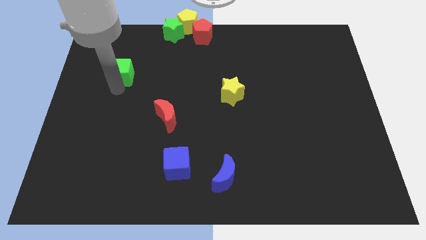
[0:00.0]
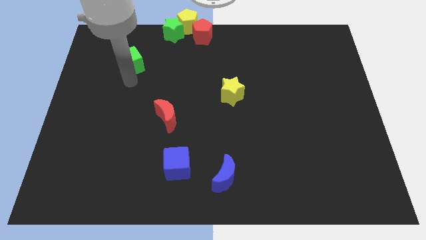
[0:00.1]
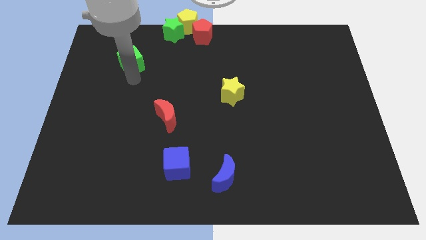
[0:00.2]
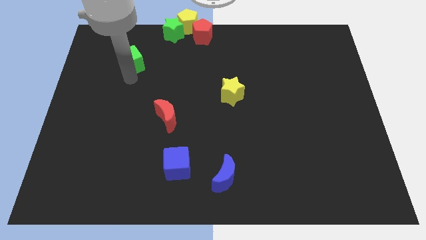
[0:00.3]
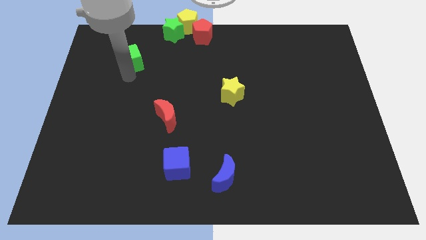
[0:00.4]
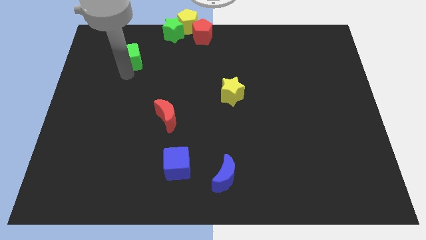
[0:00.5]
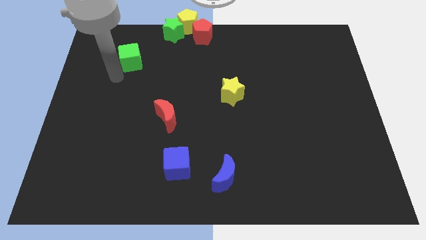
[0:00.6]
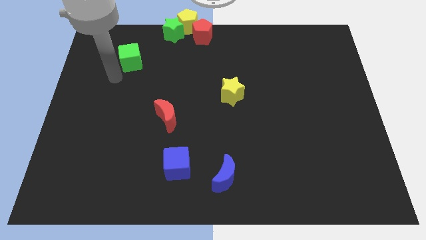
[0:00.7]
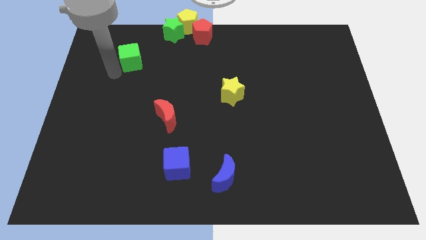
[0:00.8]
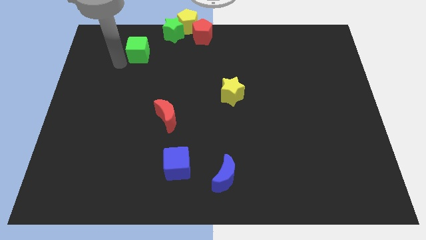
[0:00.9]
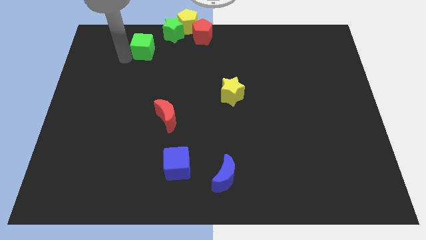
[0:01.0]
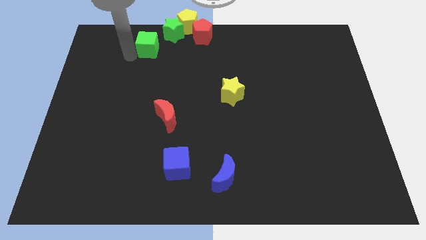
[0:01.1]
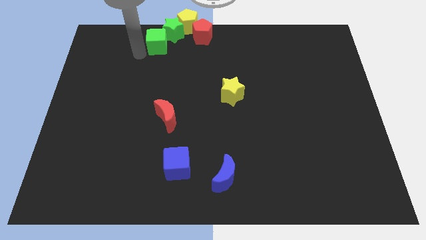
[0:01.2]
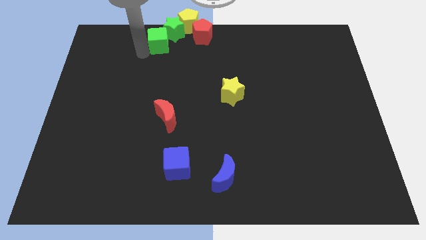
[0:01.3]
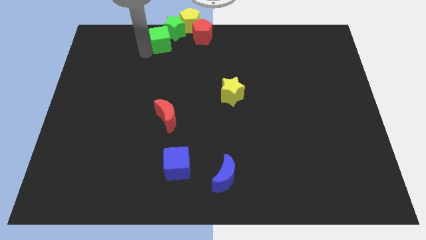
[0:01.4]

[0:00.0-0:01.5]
move the green cube into the green star

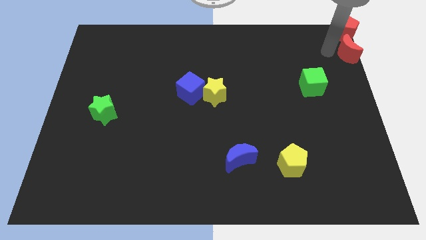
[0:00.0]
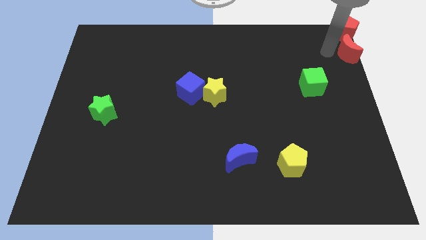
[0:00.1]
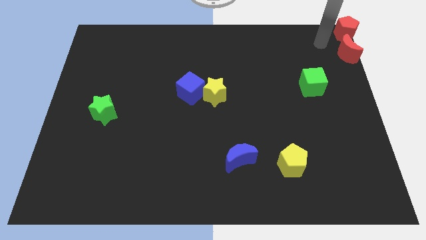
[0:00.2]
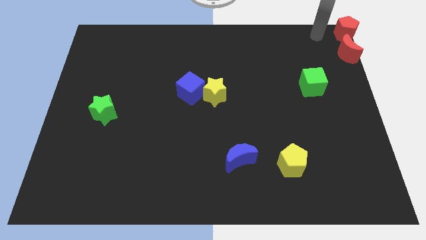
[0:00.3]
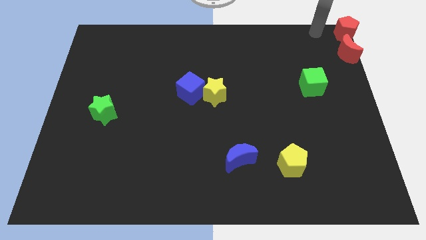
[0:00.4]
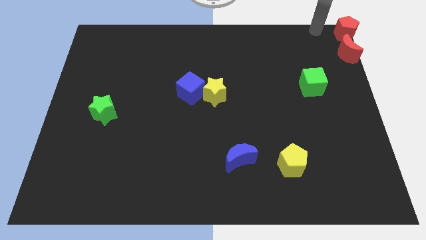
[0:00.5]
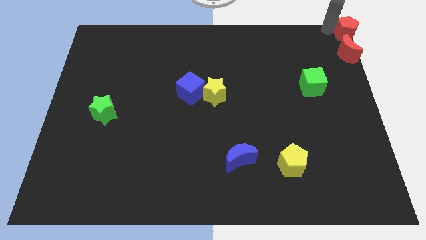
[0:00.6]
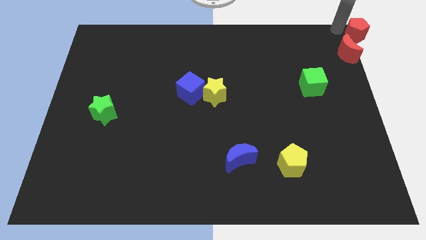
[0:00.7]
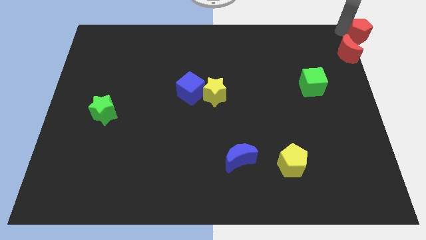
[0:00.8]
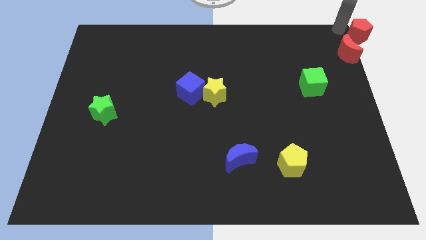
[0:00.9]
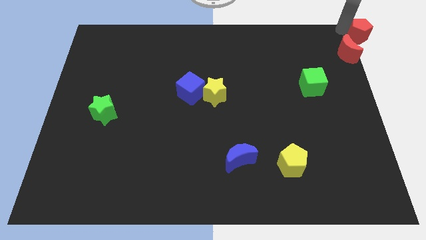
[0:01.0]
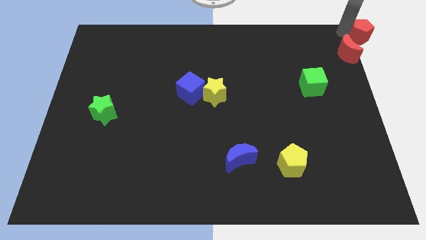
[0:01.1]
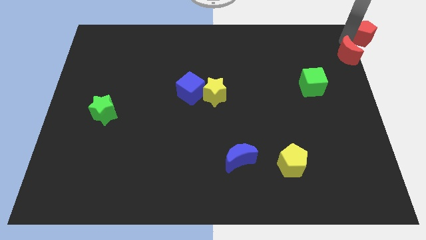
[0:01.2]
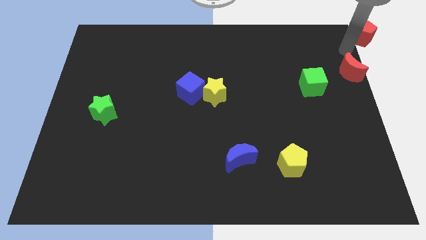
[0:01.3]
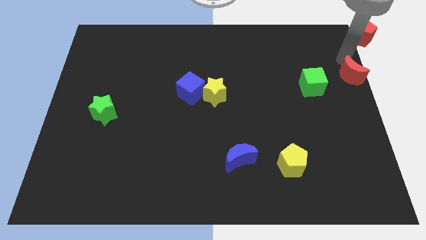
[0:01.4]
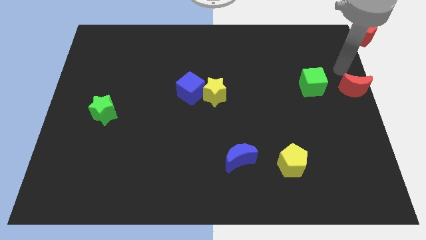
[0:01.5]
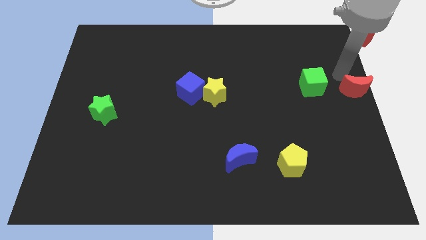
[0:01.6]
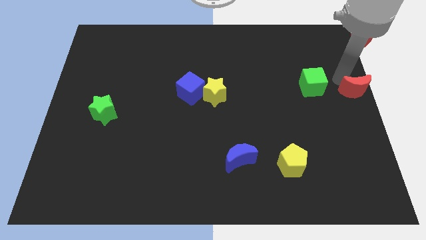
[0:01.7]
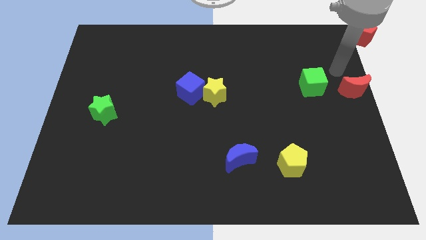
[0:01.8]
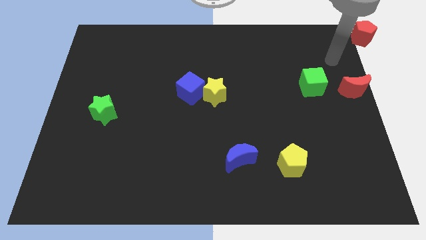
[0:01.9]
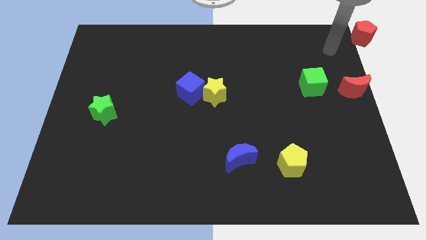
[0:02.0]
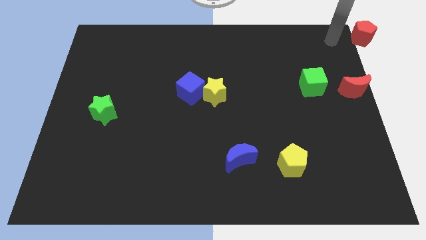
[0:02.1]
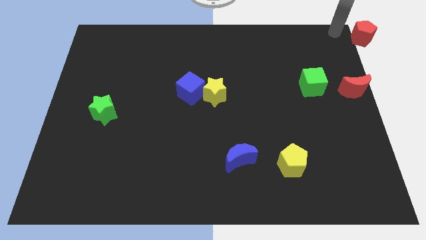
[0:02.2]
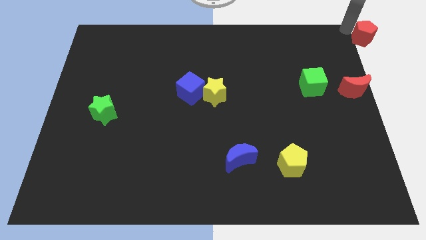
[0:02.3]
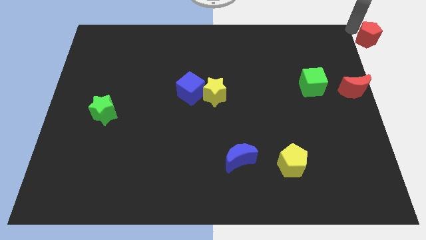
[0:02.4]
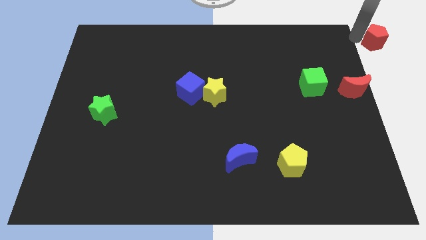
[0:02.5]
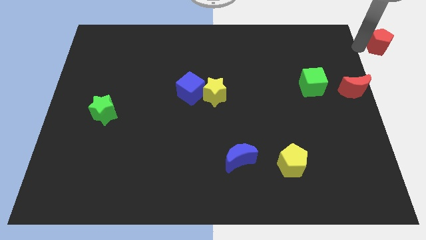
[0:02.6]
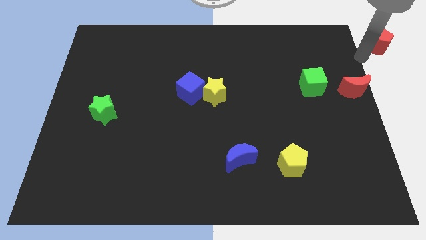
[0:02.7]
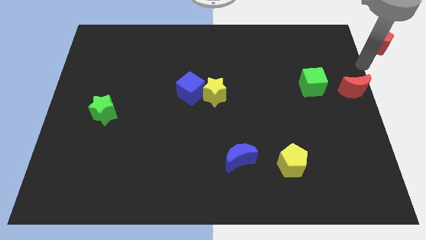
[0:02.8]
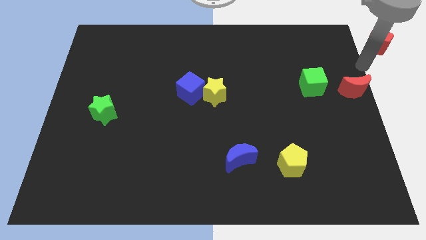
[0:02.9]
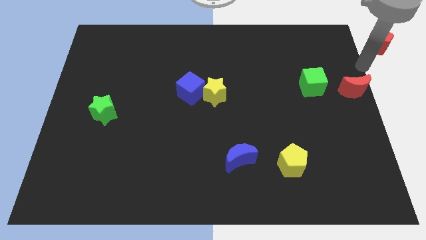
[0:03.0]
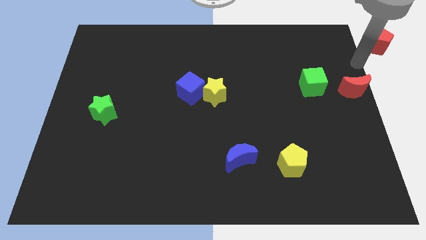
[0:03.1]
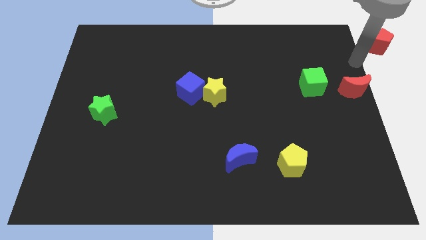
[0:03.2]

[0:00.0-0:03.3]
move red moon to the right of green cube

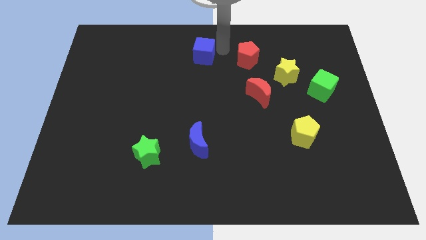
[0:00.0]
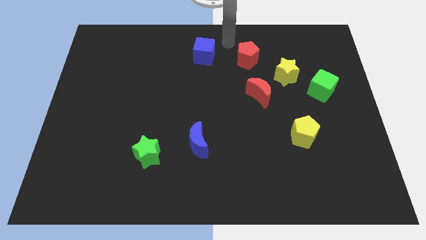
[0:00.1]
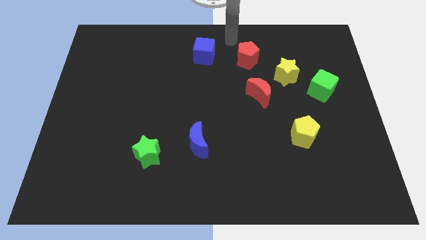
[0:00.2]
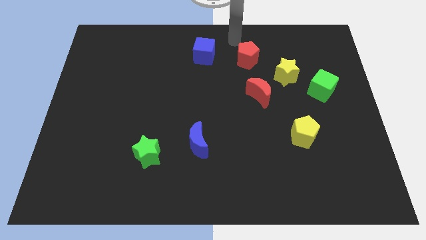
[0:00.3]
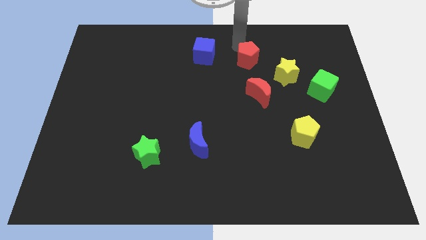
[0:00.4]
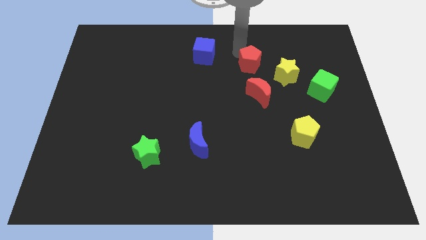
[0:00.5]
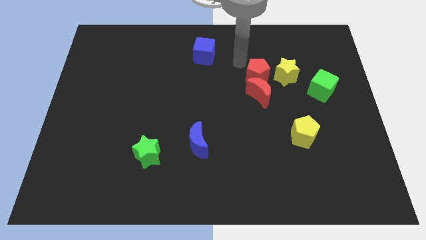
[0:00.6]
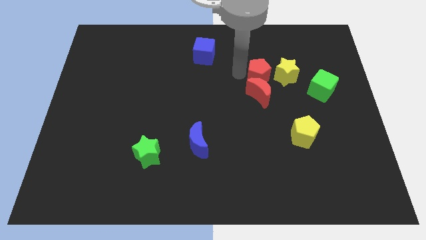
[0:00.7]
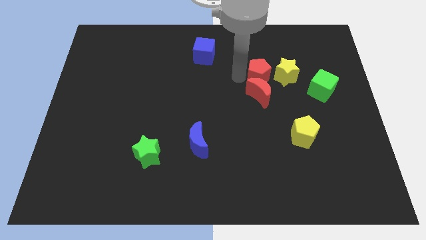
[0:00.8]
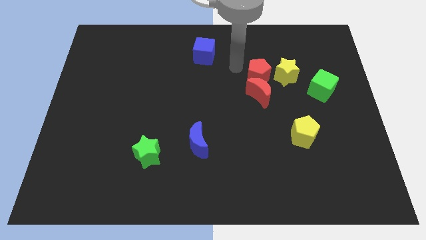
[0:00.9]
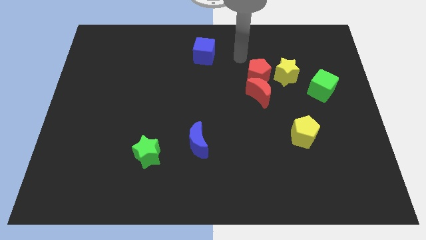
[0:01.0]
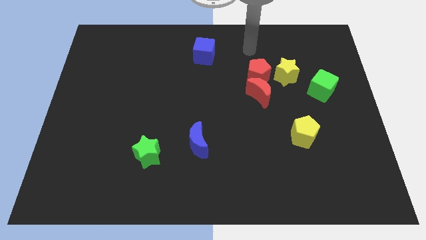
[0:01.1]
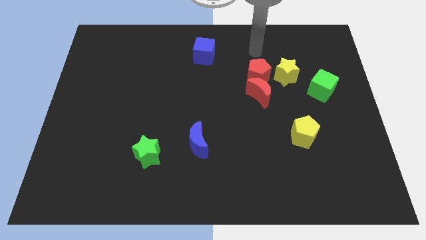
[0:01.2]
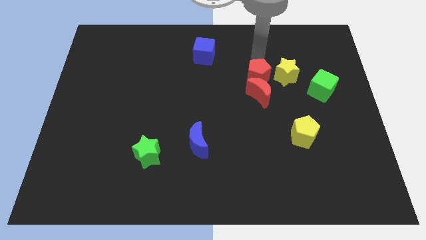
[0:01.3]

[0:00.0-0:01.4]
push the red pentagon into the red crescent

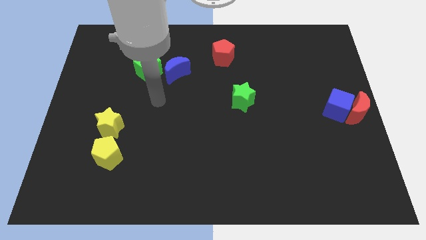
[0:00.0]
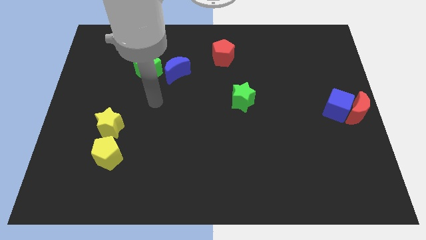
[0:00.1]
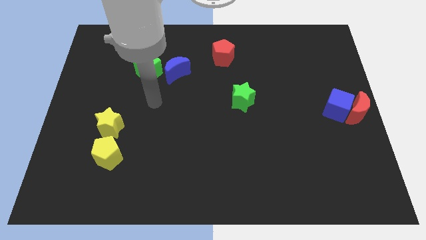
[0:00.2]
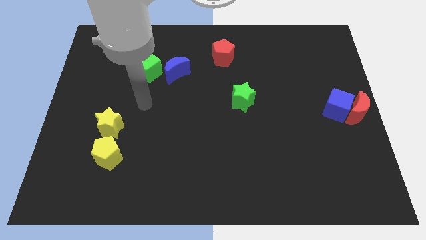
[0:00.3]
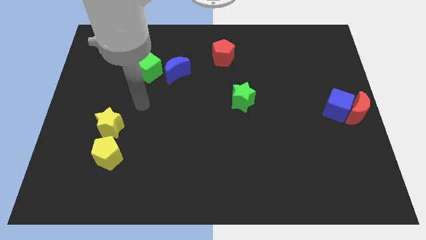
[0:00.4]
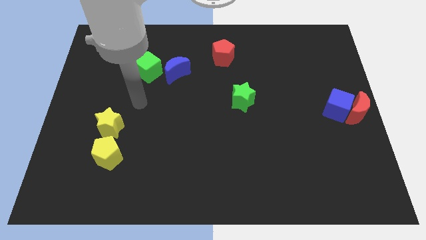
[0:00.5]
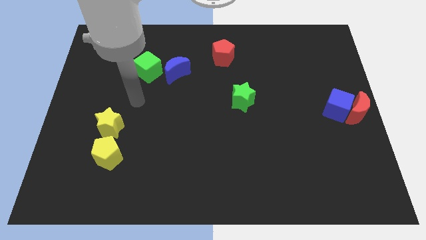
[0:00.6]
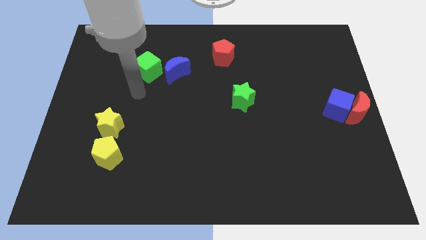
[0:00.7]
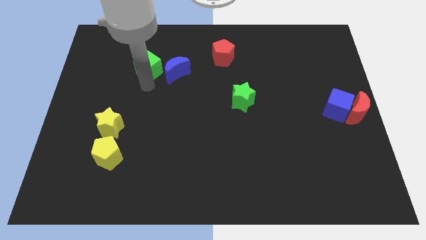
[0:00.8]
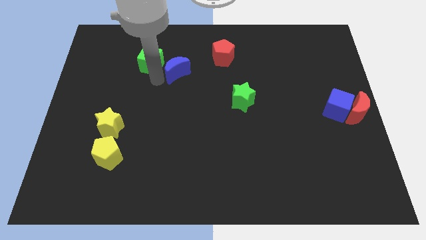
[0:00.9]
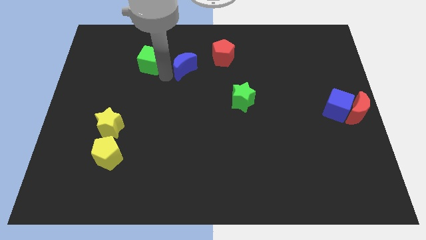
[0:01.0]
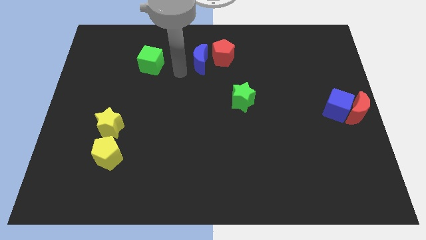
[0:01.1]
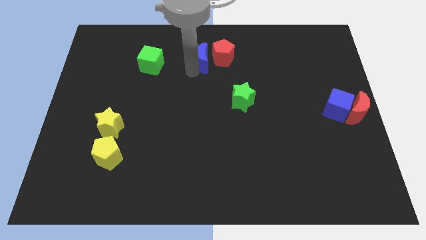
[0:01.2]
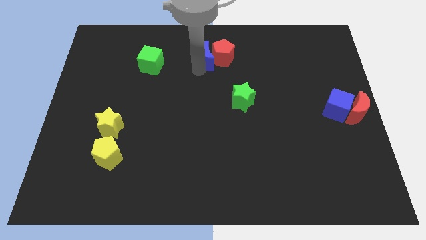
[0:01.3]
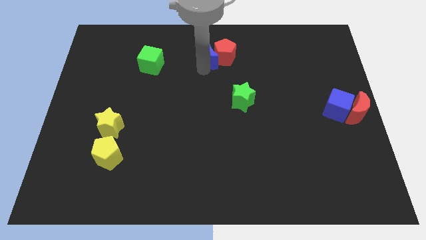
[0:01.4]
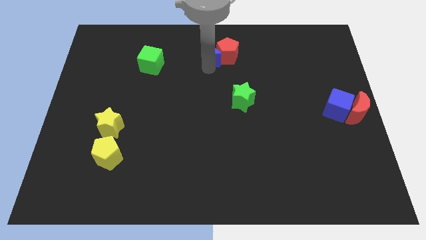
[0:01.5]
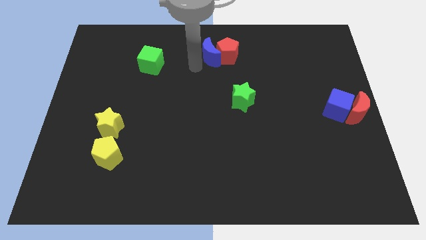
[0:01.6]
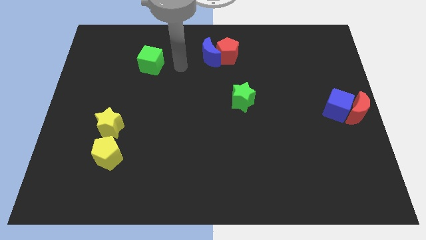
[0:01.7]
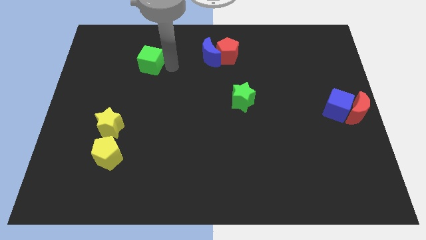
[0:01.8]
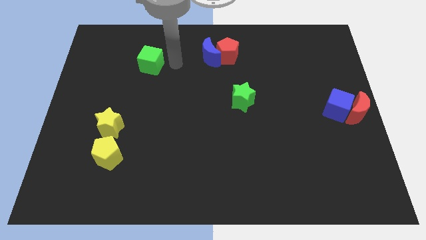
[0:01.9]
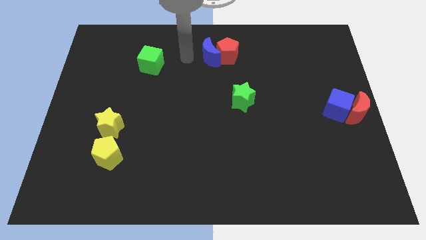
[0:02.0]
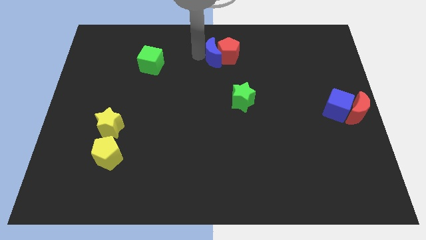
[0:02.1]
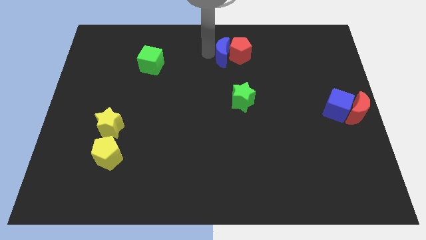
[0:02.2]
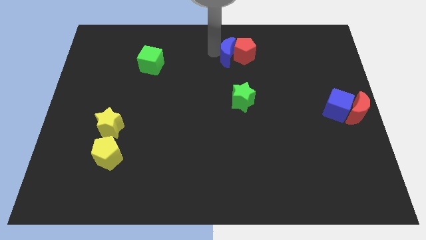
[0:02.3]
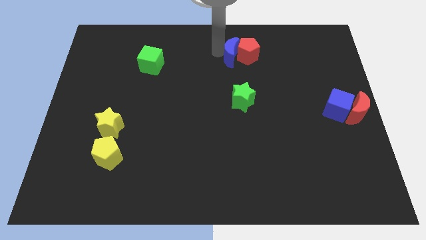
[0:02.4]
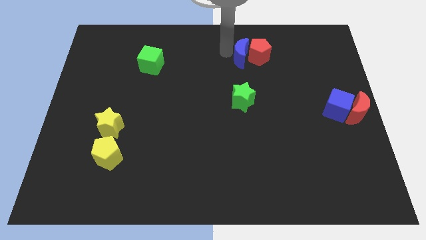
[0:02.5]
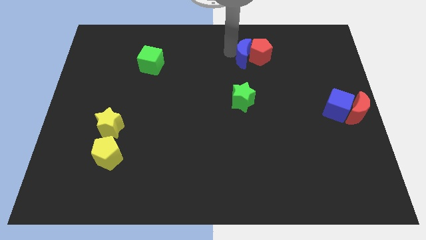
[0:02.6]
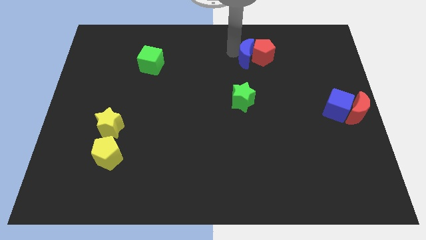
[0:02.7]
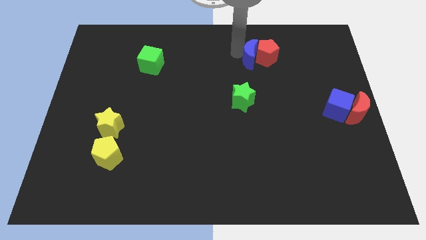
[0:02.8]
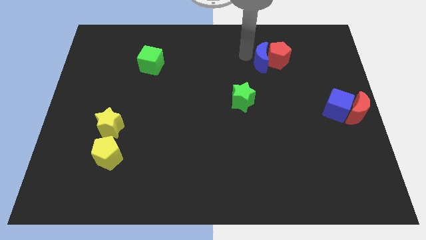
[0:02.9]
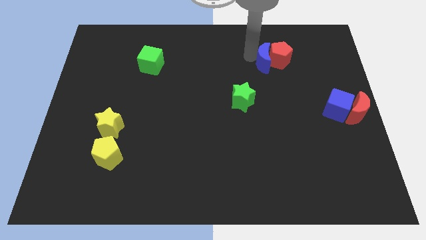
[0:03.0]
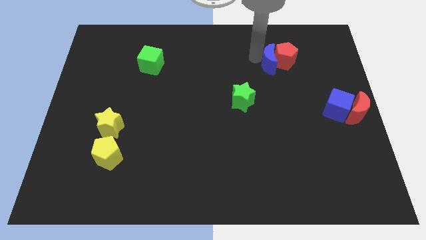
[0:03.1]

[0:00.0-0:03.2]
push the blue crescent and the red pentagon towards the right
